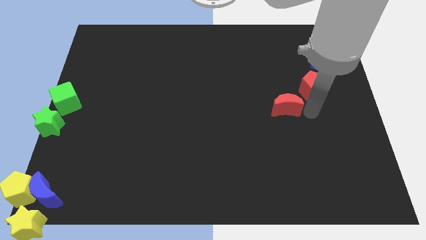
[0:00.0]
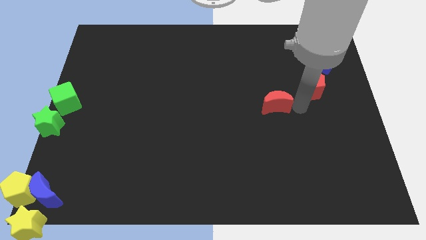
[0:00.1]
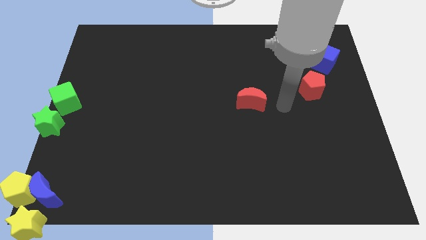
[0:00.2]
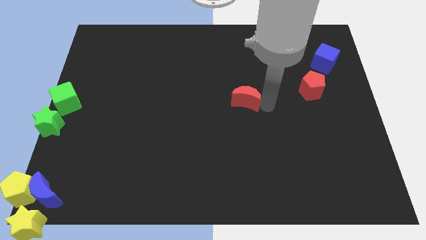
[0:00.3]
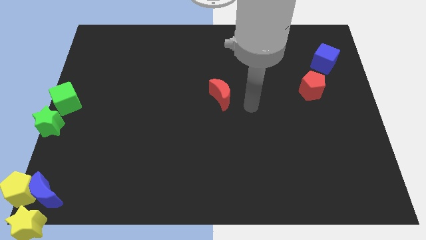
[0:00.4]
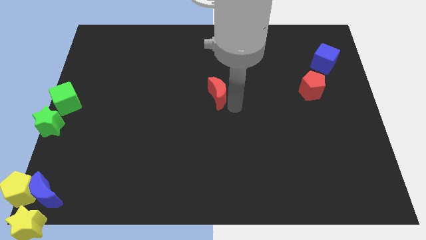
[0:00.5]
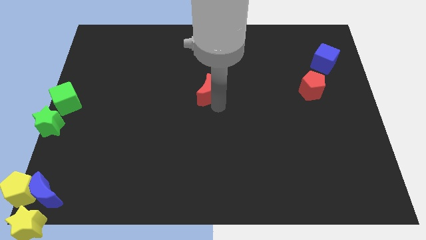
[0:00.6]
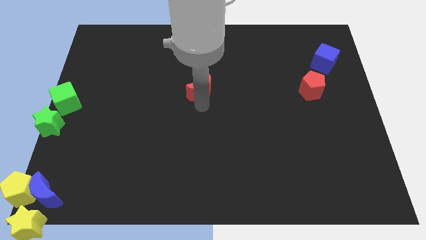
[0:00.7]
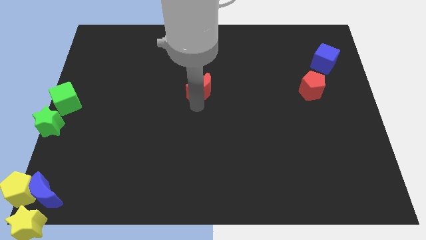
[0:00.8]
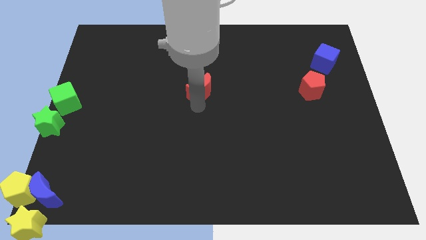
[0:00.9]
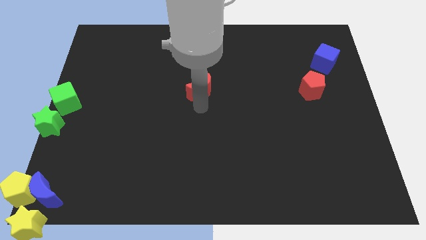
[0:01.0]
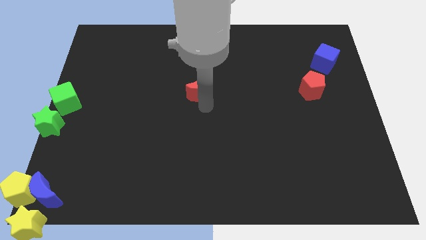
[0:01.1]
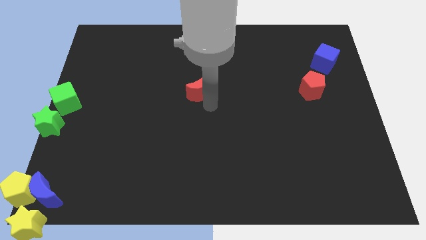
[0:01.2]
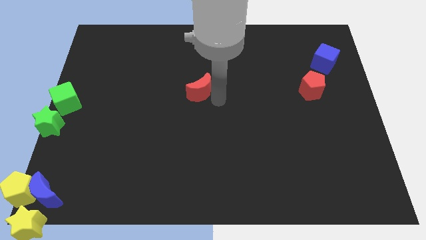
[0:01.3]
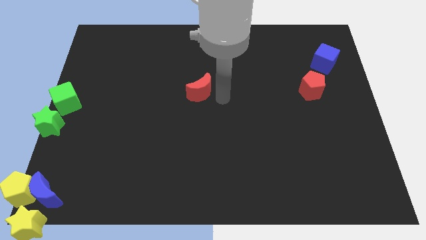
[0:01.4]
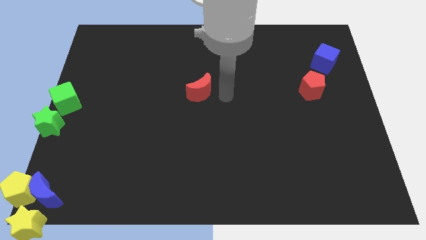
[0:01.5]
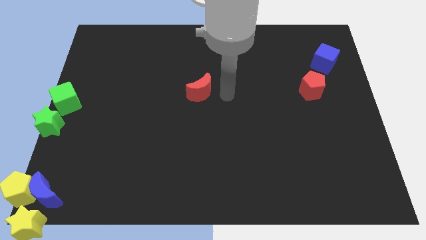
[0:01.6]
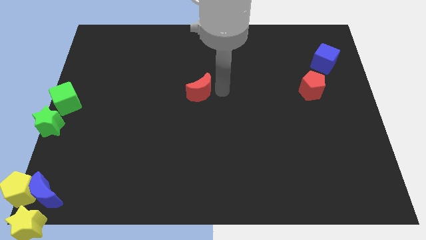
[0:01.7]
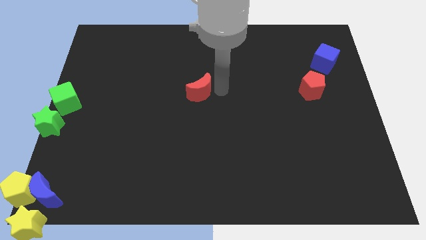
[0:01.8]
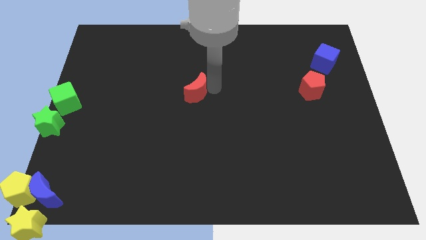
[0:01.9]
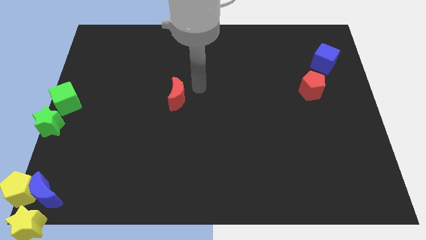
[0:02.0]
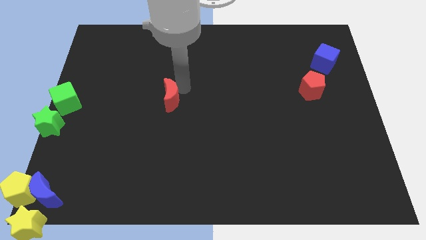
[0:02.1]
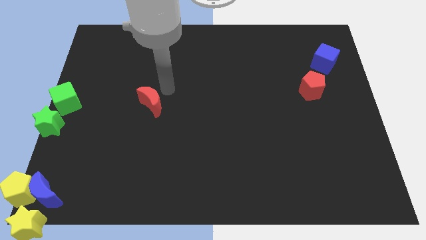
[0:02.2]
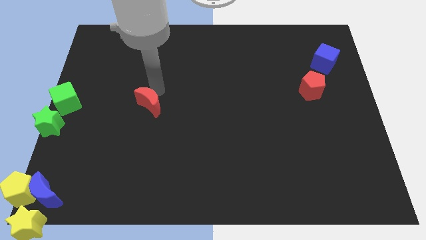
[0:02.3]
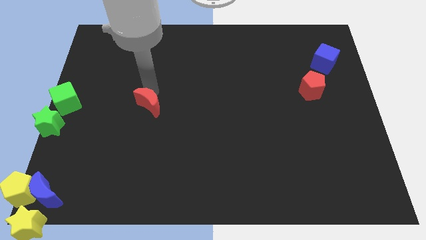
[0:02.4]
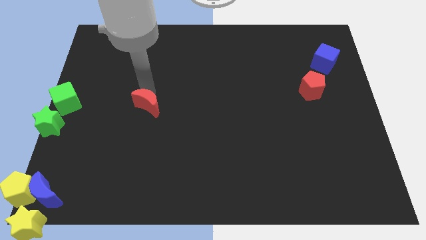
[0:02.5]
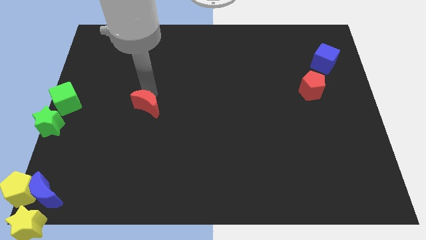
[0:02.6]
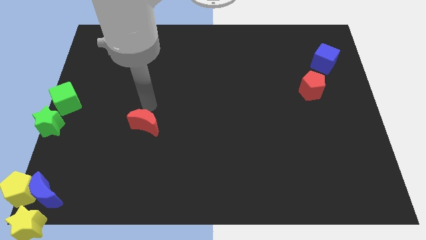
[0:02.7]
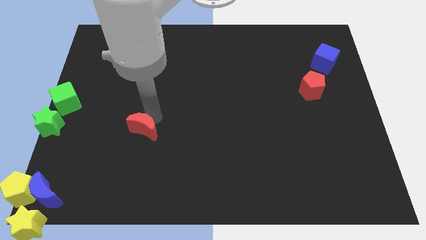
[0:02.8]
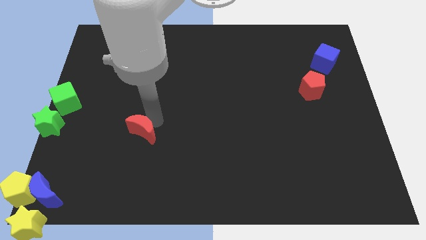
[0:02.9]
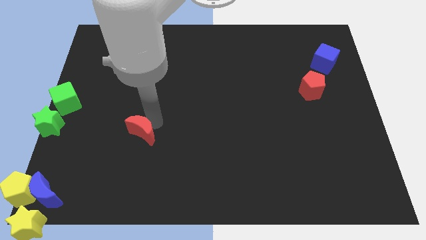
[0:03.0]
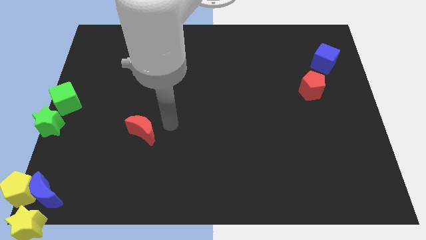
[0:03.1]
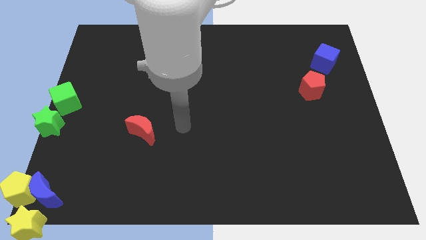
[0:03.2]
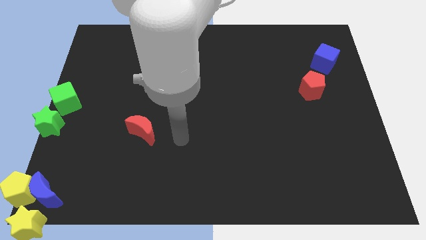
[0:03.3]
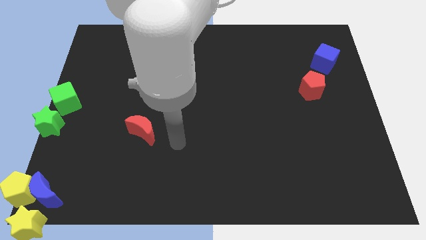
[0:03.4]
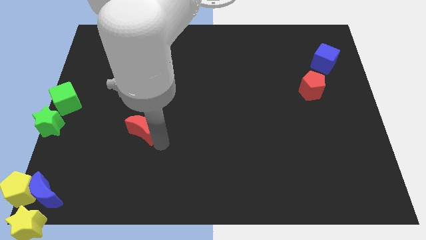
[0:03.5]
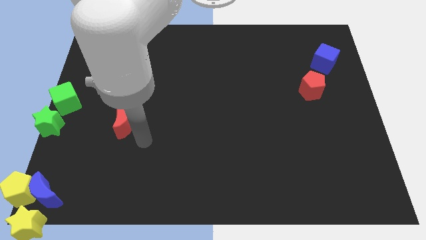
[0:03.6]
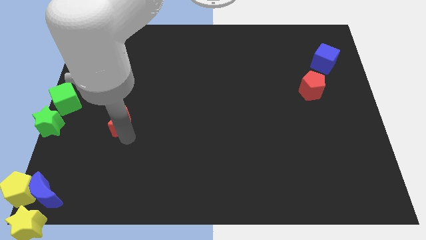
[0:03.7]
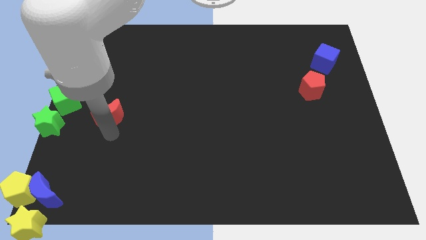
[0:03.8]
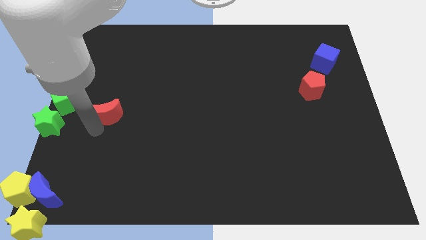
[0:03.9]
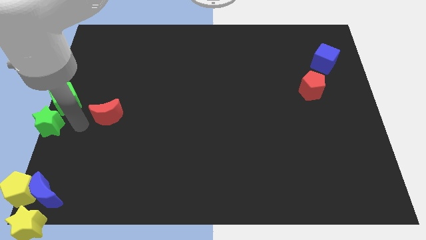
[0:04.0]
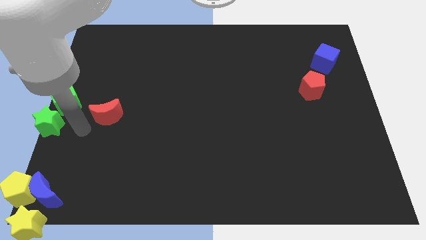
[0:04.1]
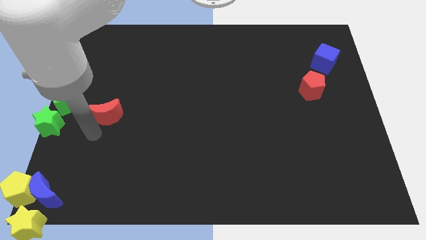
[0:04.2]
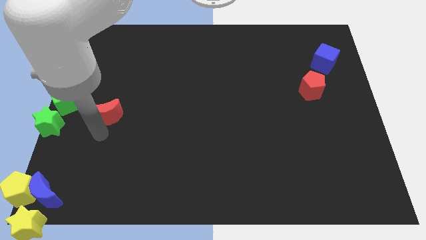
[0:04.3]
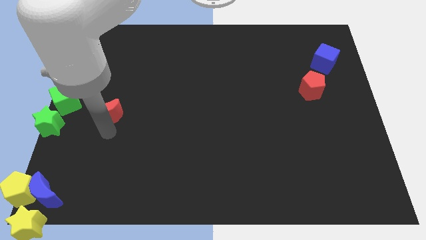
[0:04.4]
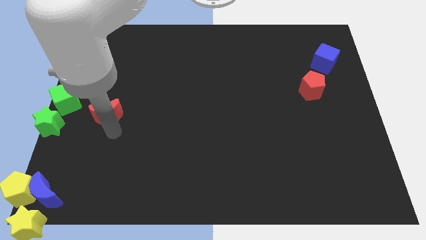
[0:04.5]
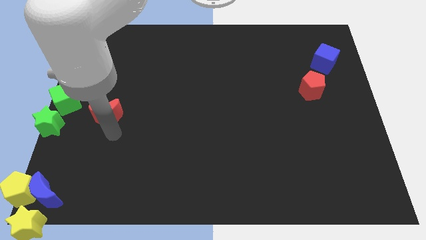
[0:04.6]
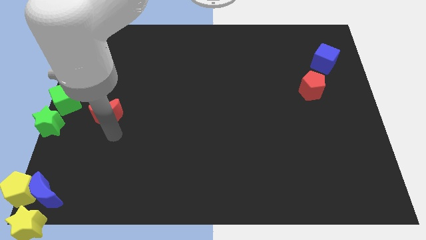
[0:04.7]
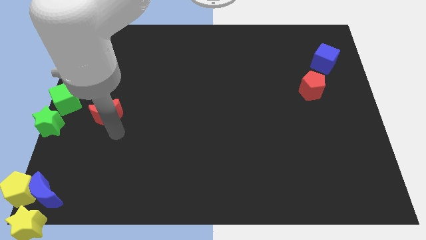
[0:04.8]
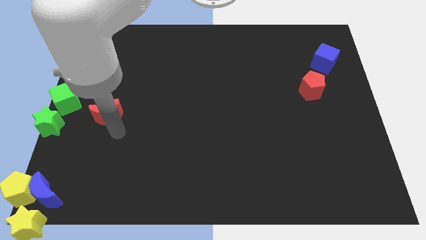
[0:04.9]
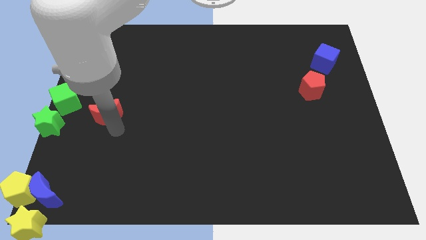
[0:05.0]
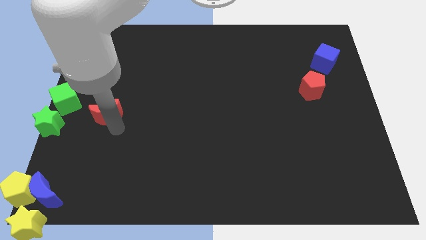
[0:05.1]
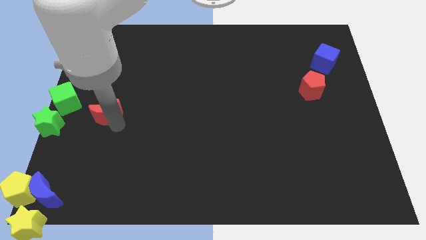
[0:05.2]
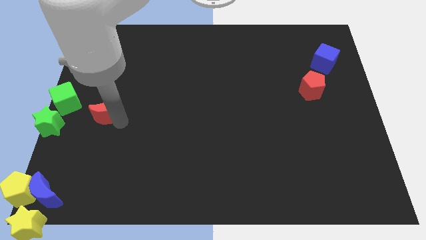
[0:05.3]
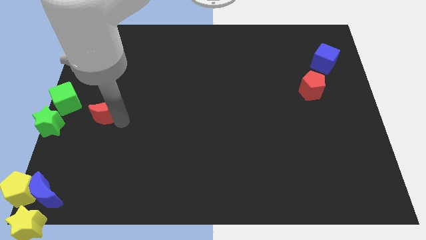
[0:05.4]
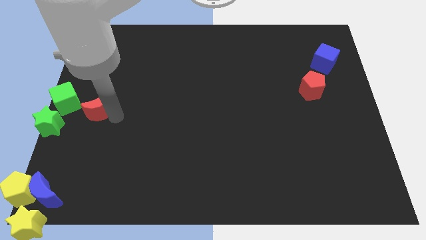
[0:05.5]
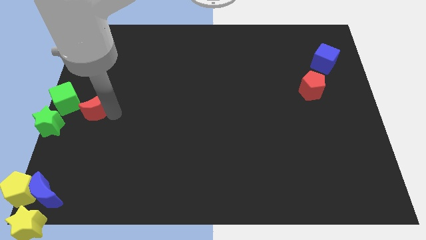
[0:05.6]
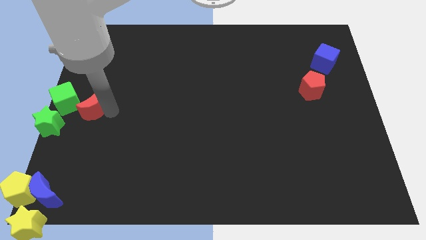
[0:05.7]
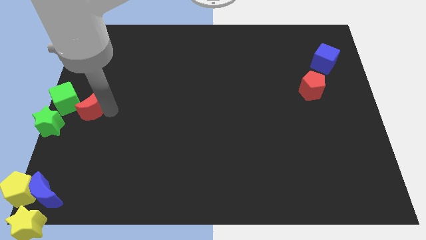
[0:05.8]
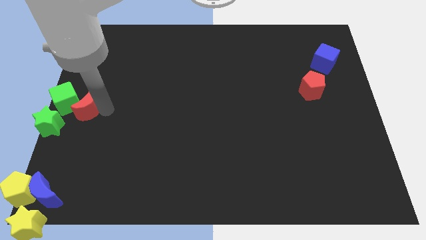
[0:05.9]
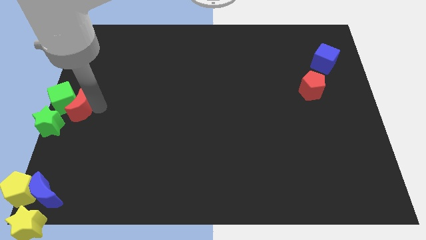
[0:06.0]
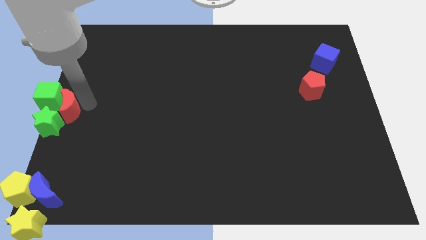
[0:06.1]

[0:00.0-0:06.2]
move red moon into green cube and green star

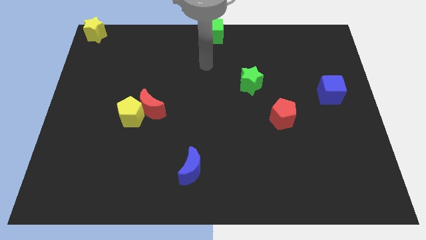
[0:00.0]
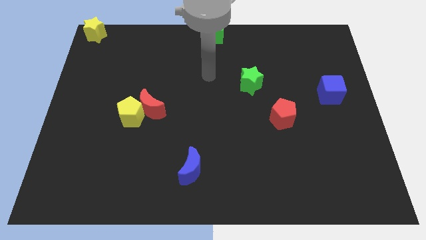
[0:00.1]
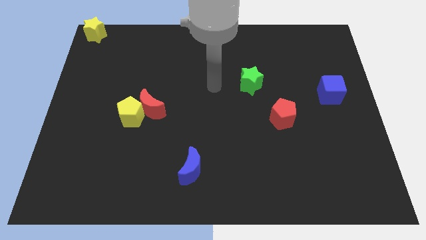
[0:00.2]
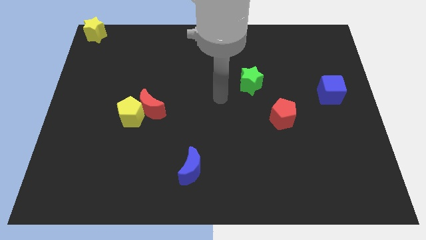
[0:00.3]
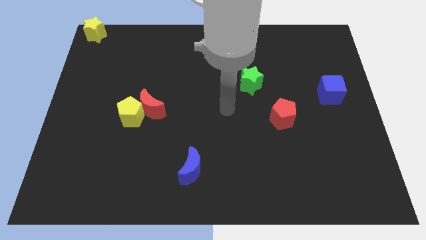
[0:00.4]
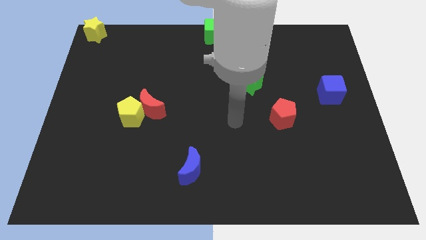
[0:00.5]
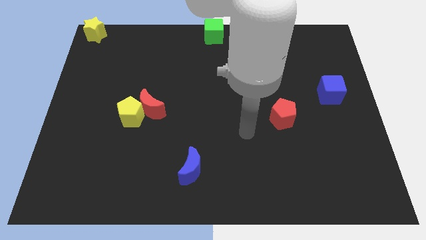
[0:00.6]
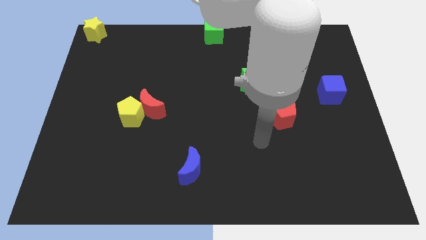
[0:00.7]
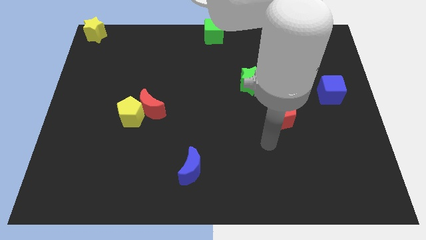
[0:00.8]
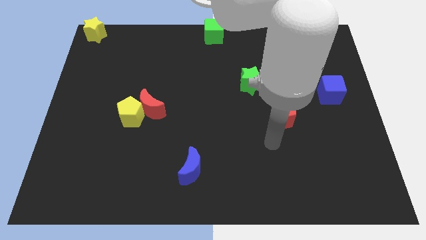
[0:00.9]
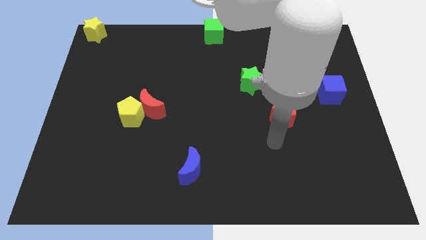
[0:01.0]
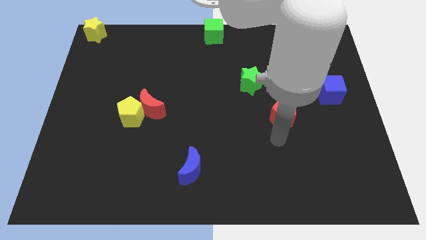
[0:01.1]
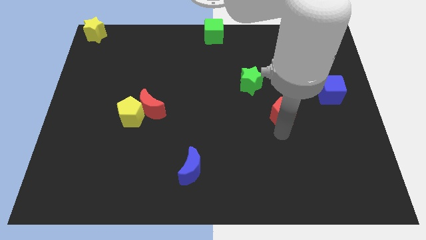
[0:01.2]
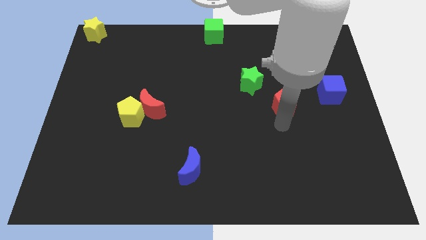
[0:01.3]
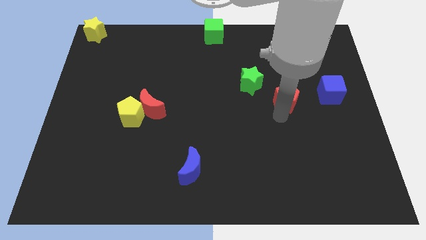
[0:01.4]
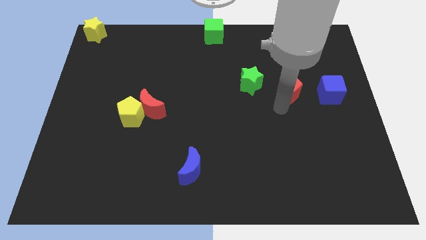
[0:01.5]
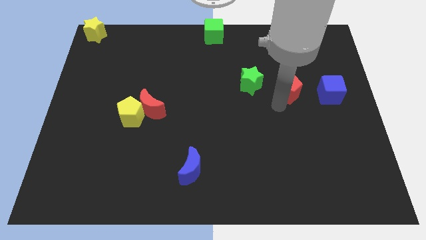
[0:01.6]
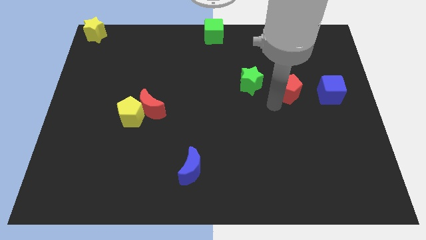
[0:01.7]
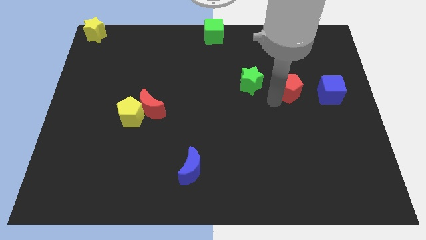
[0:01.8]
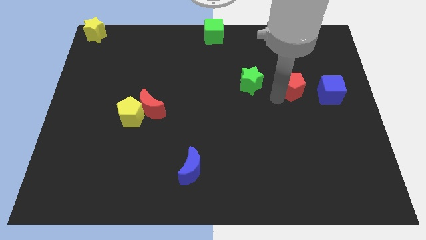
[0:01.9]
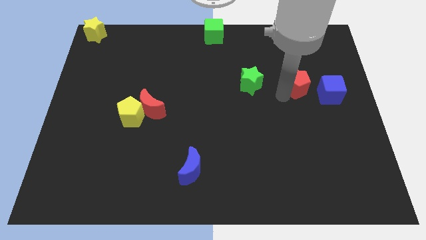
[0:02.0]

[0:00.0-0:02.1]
place the red pentagon in between the green star and blue cube

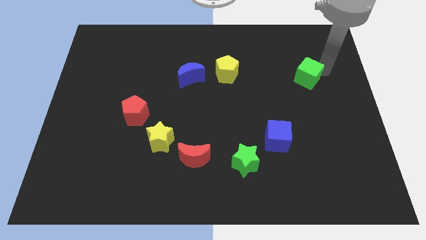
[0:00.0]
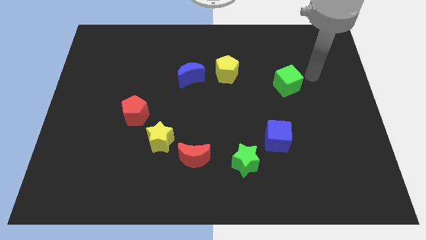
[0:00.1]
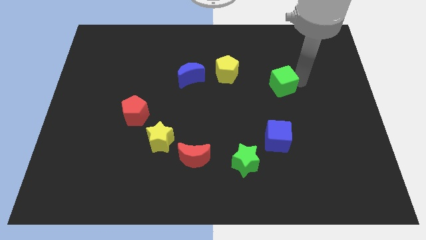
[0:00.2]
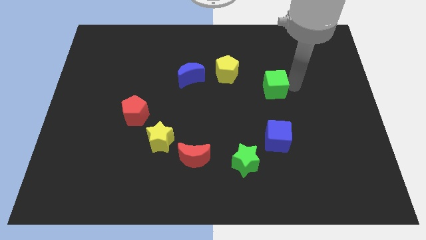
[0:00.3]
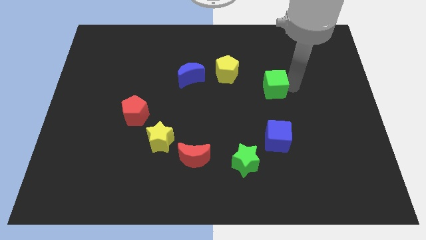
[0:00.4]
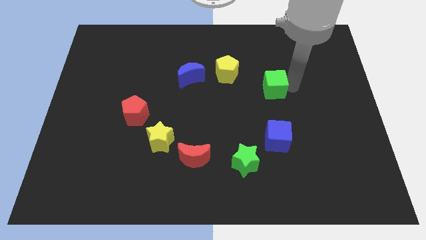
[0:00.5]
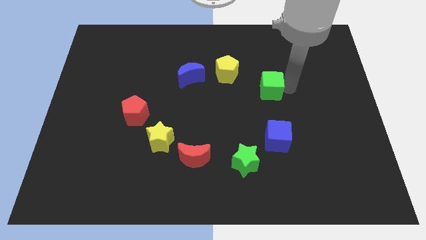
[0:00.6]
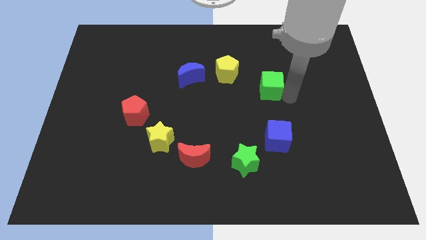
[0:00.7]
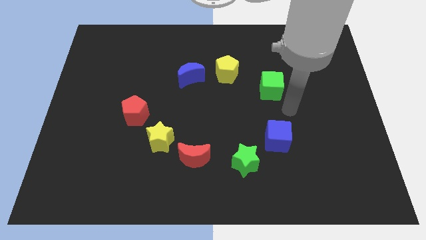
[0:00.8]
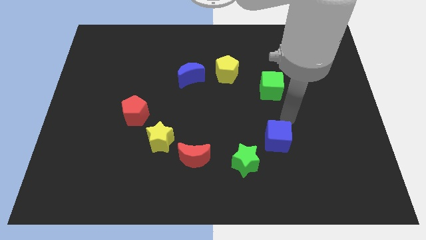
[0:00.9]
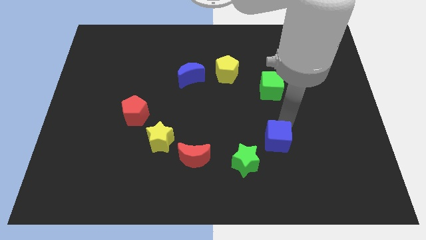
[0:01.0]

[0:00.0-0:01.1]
place the green cube above the blue cube
